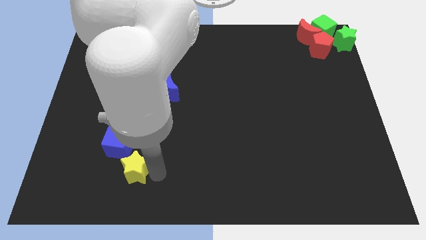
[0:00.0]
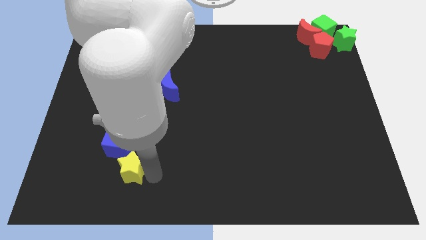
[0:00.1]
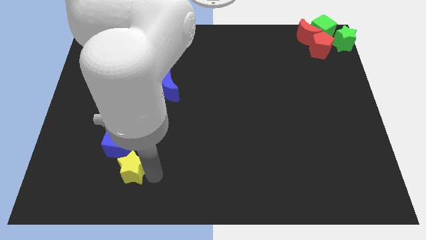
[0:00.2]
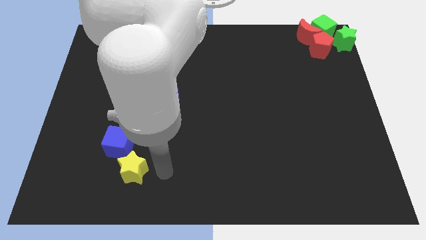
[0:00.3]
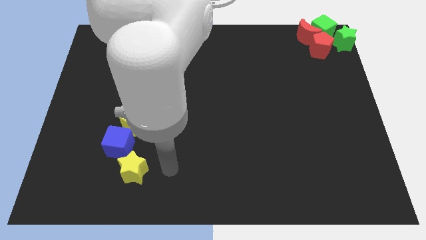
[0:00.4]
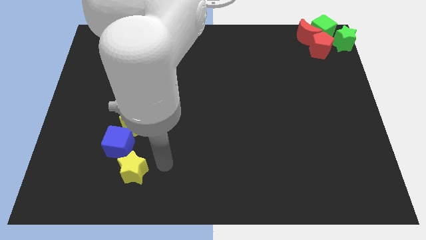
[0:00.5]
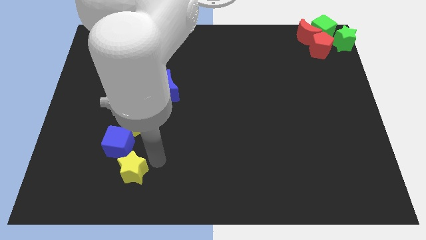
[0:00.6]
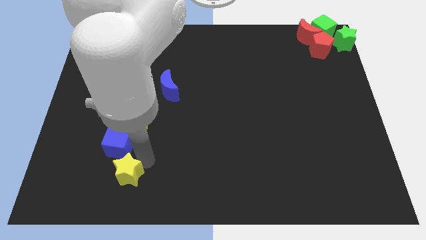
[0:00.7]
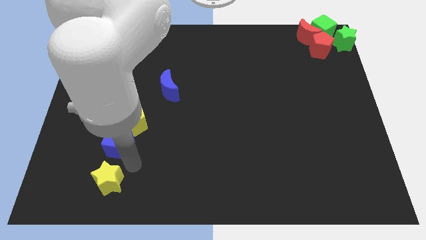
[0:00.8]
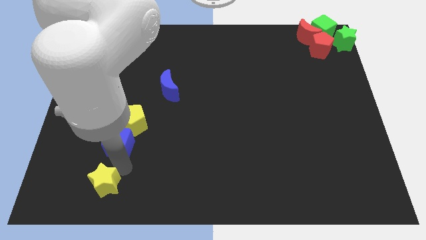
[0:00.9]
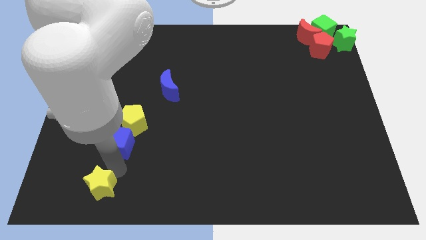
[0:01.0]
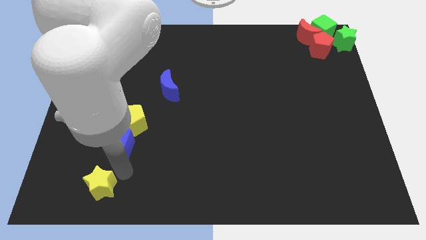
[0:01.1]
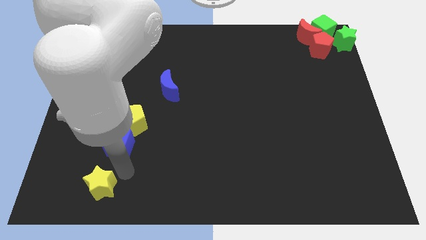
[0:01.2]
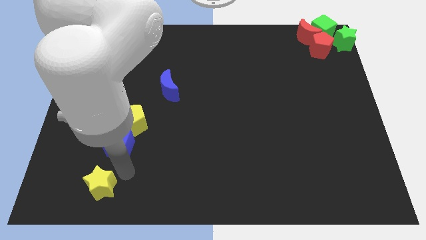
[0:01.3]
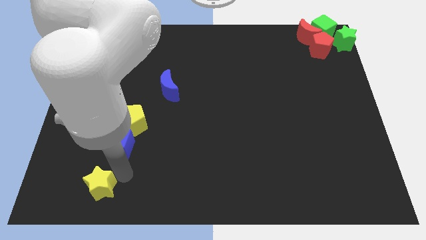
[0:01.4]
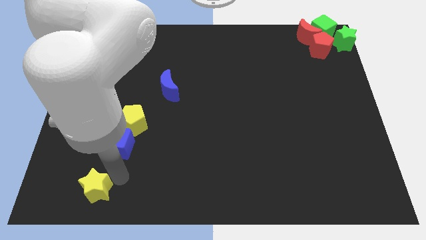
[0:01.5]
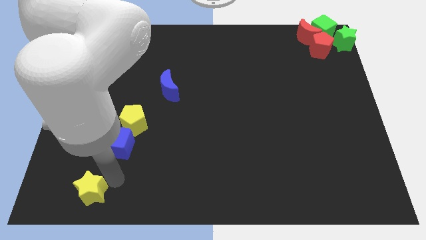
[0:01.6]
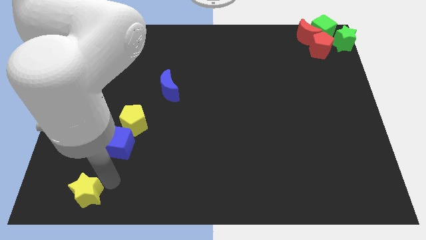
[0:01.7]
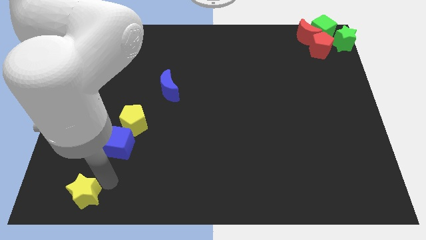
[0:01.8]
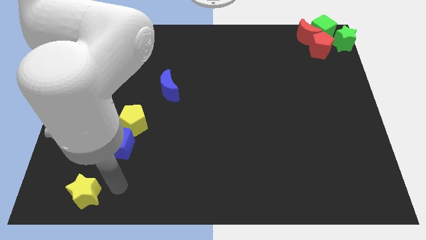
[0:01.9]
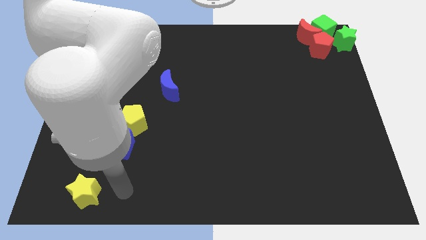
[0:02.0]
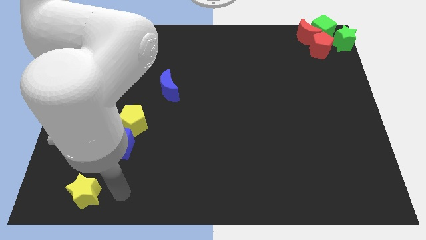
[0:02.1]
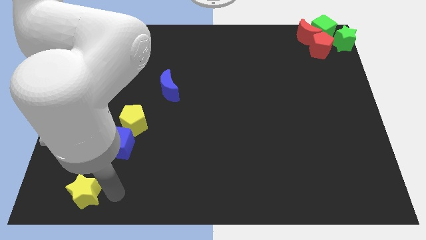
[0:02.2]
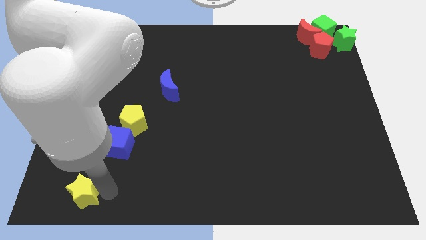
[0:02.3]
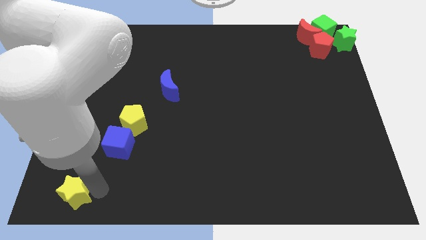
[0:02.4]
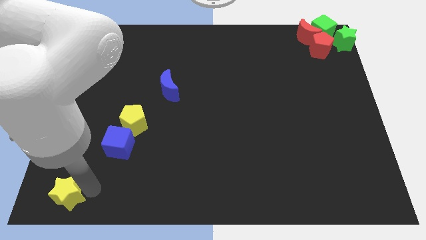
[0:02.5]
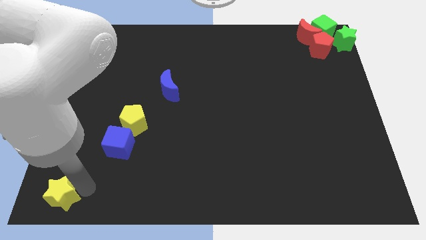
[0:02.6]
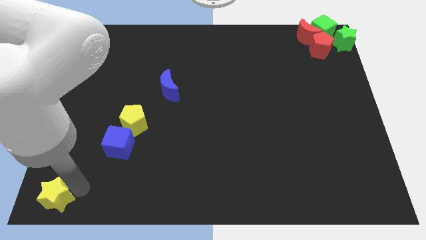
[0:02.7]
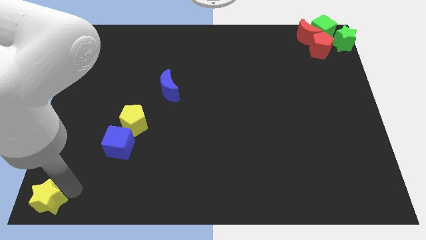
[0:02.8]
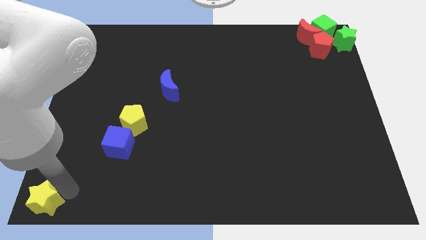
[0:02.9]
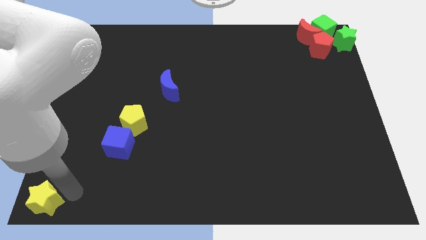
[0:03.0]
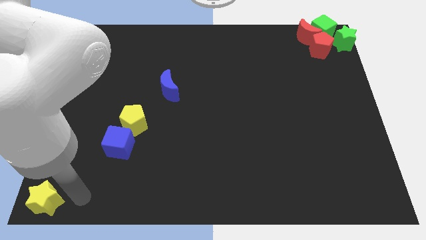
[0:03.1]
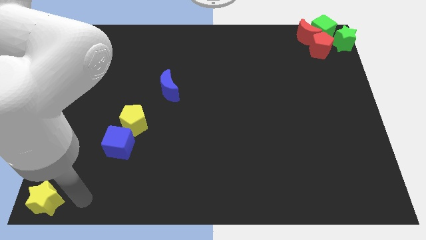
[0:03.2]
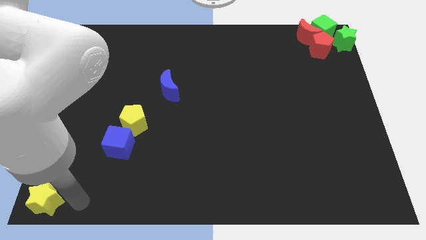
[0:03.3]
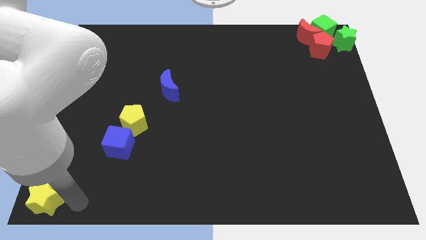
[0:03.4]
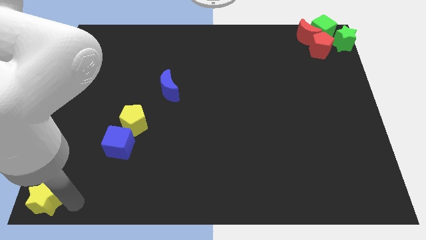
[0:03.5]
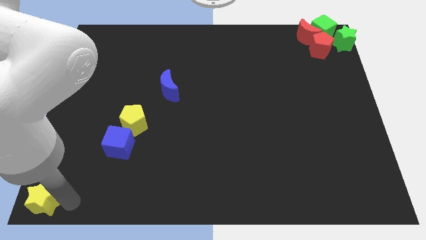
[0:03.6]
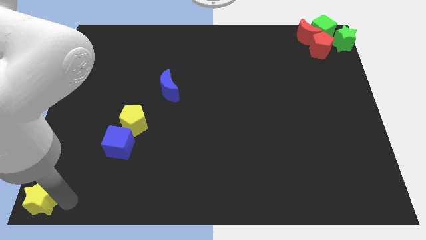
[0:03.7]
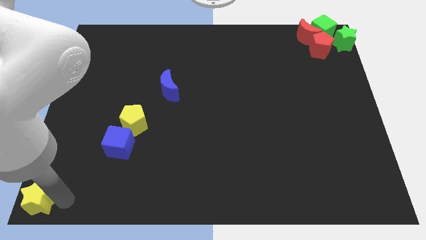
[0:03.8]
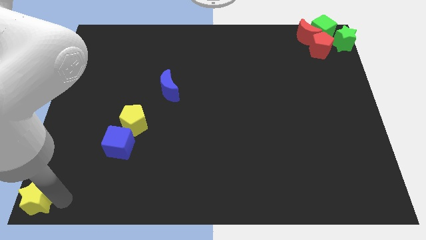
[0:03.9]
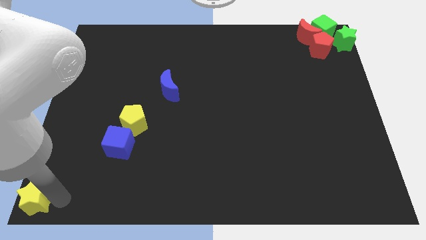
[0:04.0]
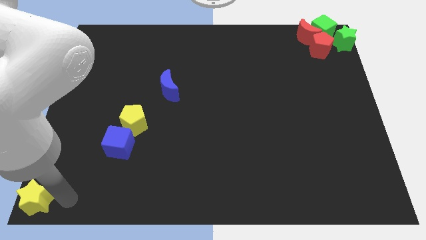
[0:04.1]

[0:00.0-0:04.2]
move the yellow star to the bottom left to the yellow star

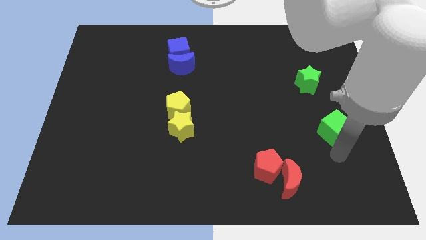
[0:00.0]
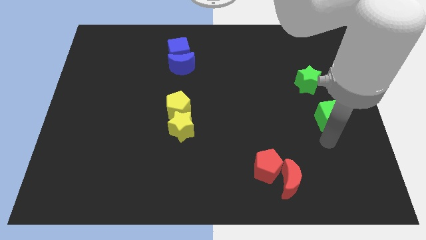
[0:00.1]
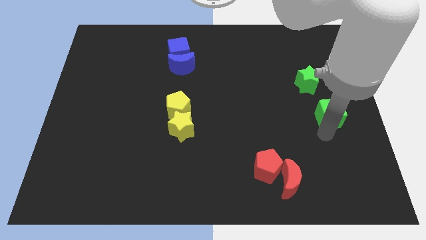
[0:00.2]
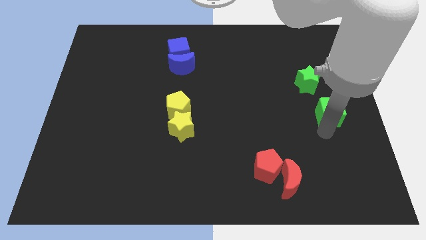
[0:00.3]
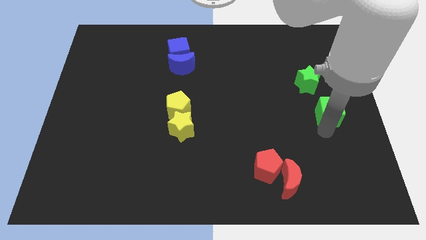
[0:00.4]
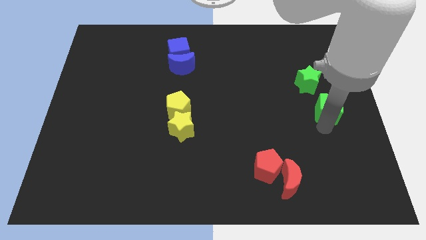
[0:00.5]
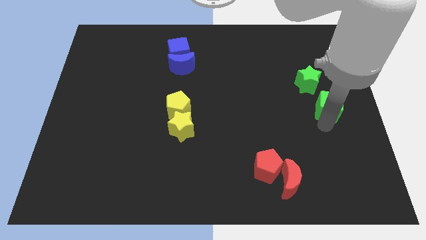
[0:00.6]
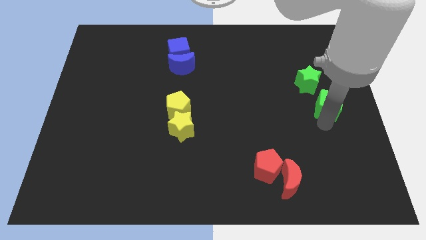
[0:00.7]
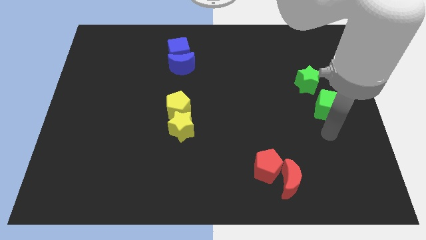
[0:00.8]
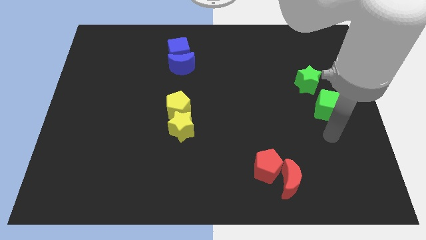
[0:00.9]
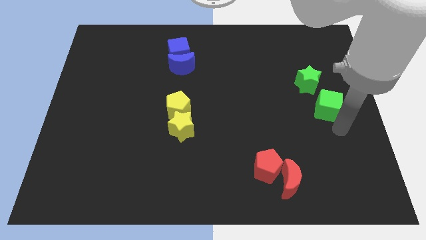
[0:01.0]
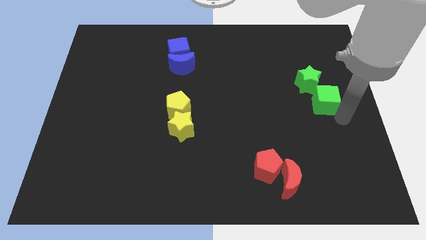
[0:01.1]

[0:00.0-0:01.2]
move the green cube bottom right the green star

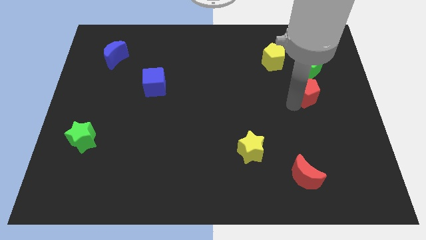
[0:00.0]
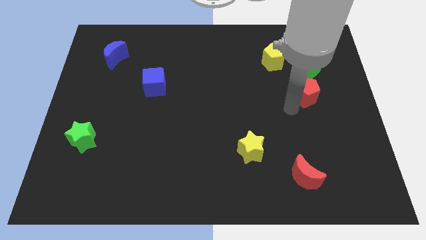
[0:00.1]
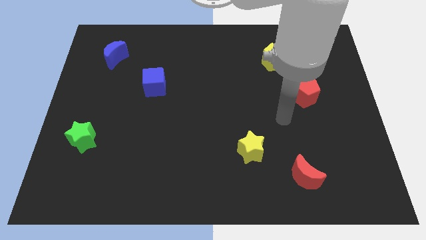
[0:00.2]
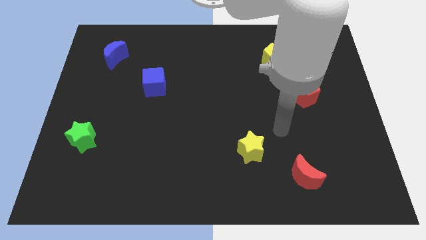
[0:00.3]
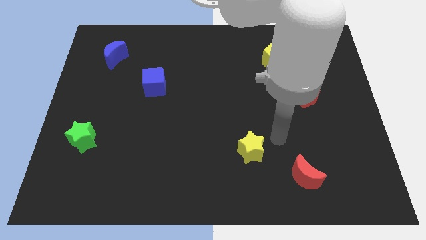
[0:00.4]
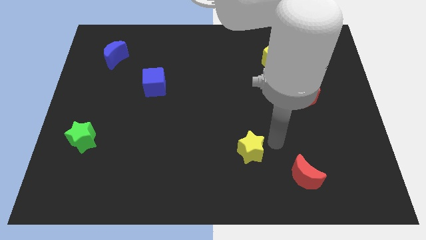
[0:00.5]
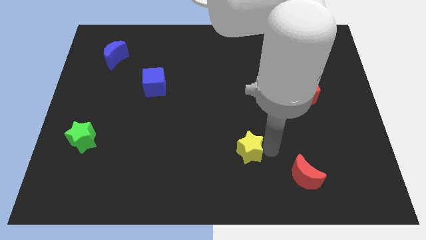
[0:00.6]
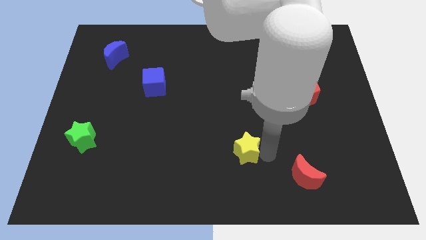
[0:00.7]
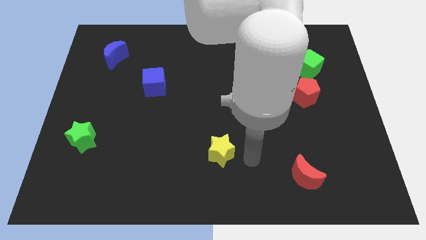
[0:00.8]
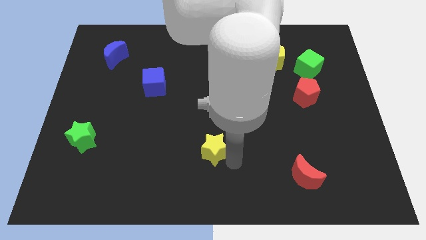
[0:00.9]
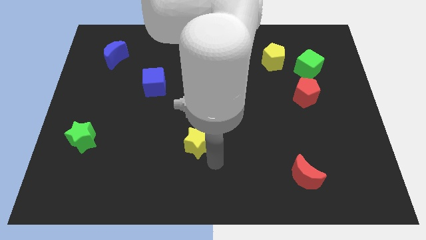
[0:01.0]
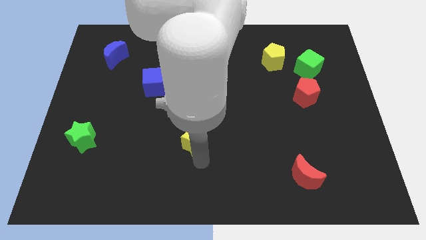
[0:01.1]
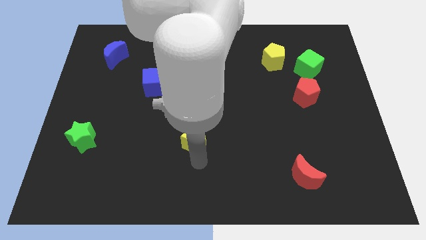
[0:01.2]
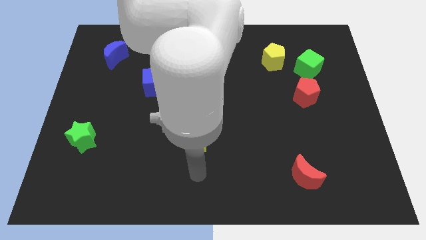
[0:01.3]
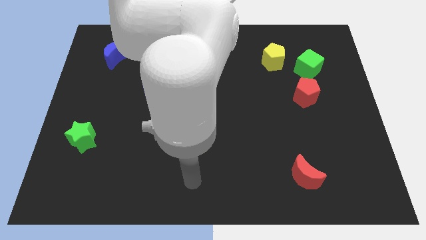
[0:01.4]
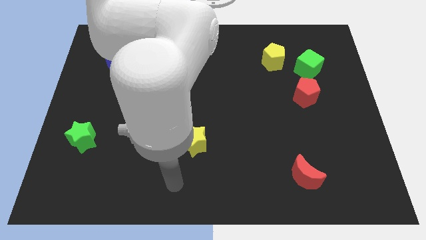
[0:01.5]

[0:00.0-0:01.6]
place the yellow star parallel to green star

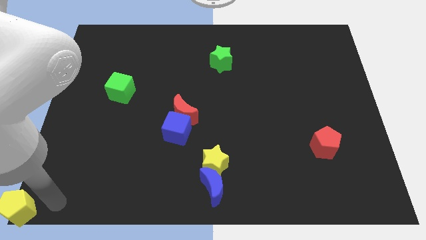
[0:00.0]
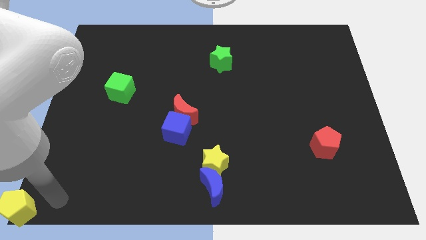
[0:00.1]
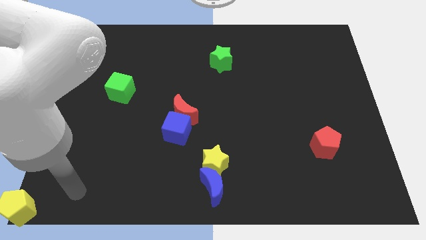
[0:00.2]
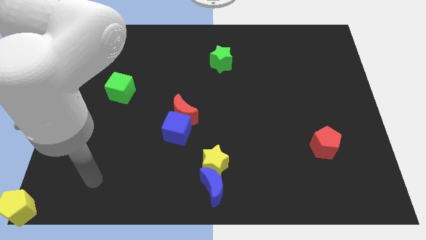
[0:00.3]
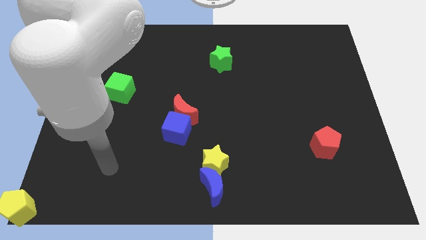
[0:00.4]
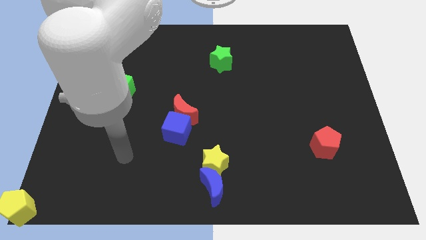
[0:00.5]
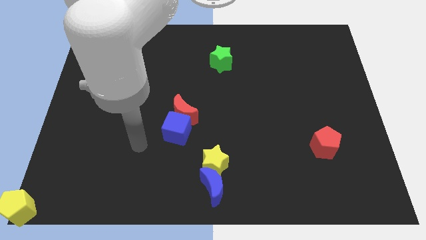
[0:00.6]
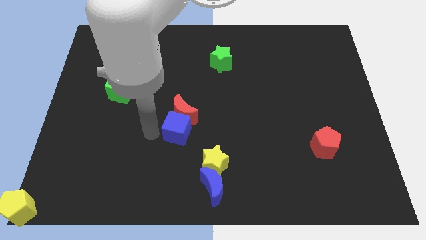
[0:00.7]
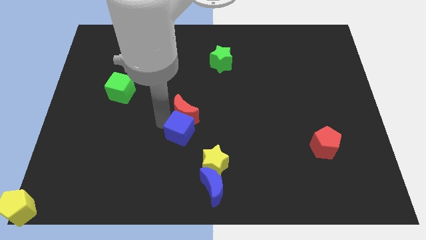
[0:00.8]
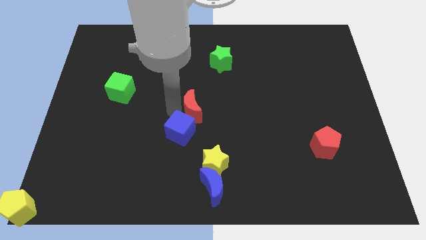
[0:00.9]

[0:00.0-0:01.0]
move arm towards red moon

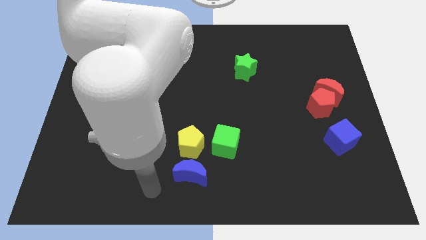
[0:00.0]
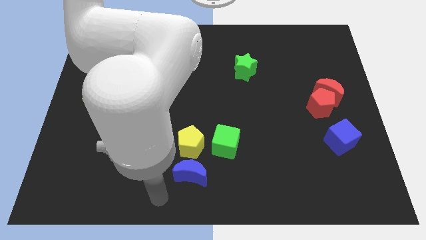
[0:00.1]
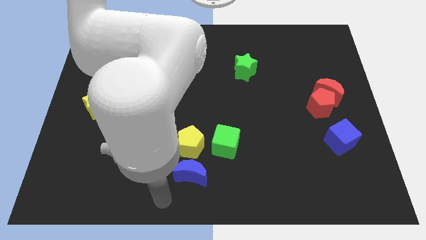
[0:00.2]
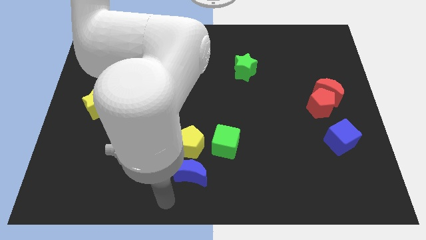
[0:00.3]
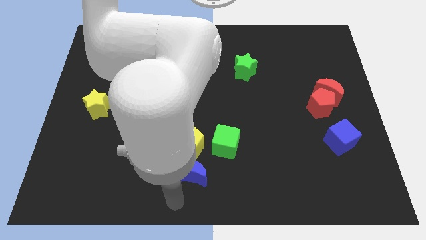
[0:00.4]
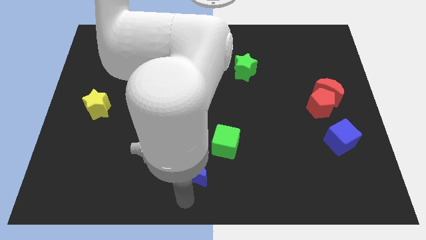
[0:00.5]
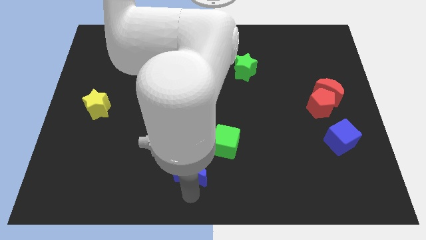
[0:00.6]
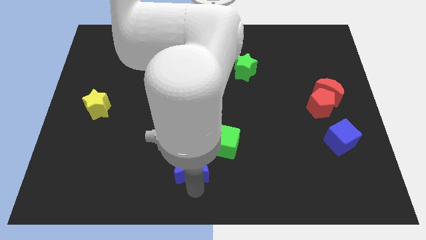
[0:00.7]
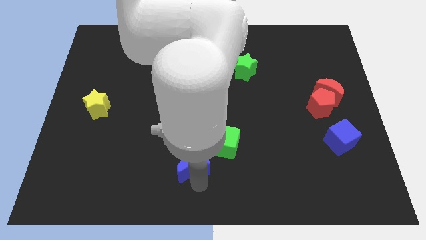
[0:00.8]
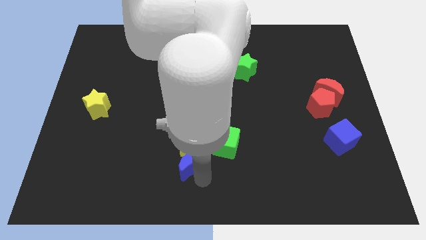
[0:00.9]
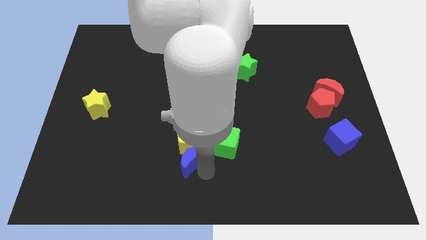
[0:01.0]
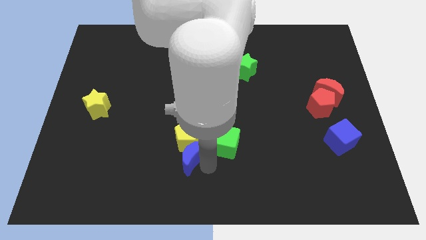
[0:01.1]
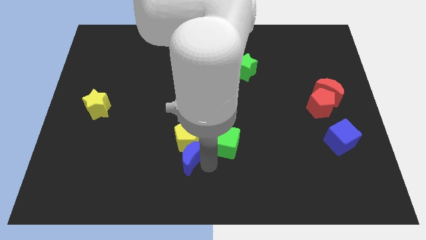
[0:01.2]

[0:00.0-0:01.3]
move the blue crescent into the yellow pentagon
